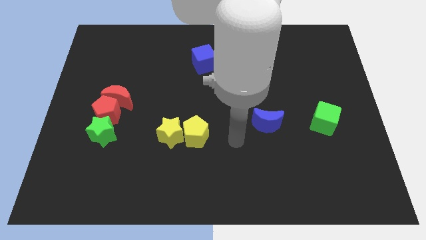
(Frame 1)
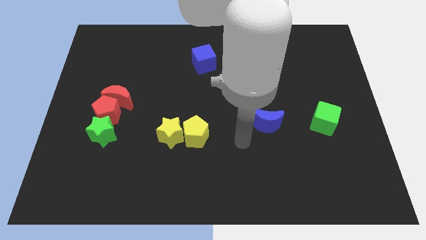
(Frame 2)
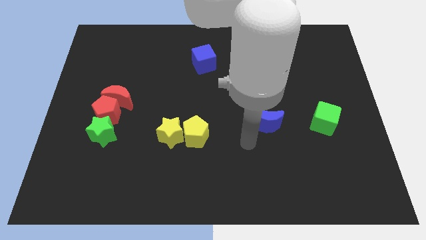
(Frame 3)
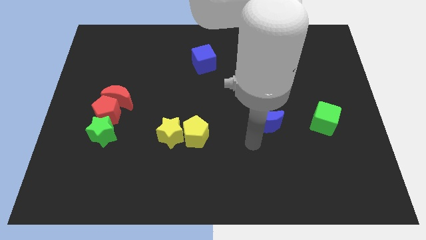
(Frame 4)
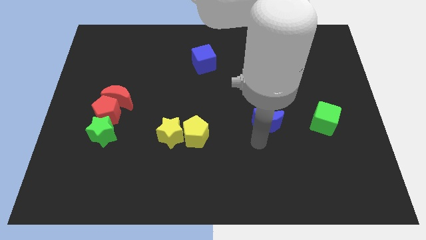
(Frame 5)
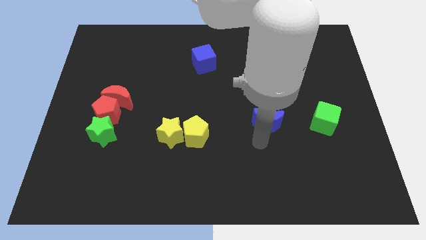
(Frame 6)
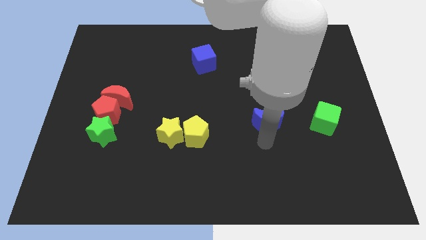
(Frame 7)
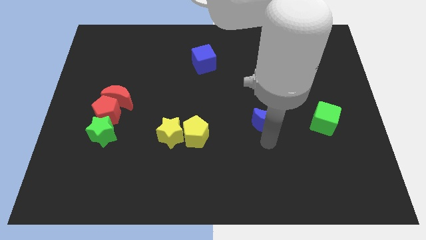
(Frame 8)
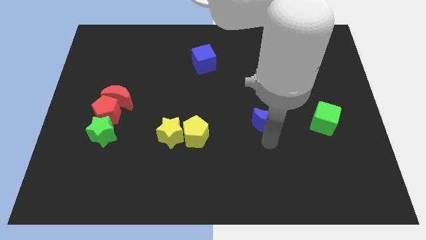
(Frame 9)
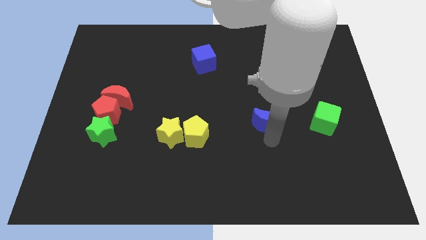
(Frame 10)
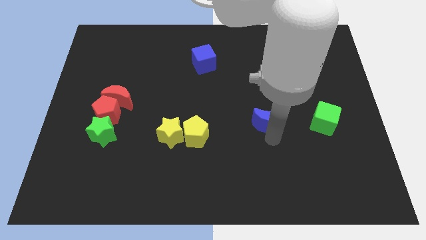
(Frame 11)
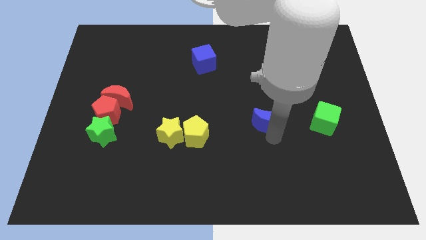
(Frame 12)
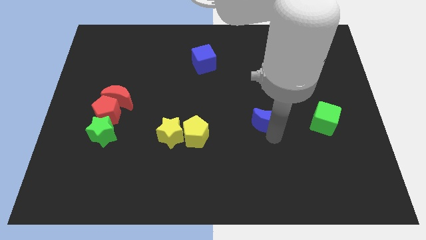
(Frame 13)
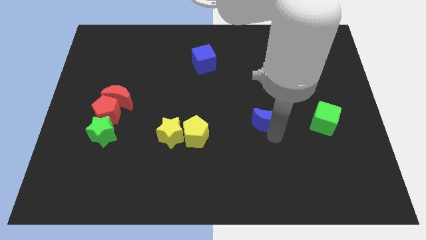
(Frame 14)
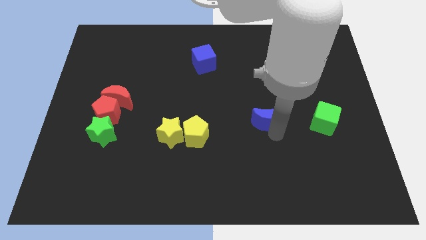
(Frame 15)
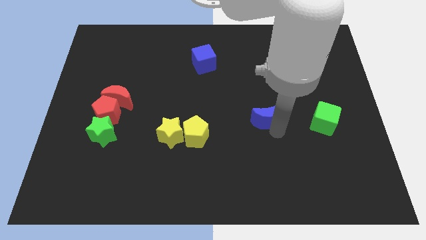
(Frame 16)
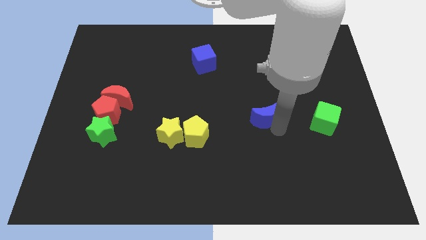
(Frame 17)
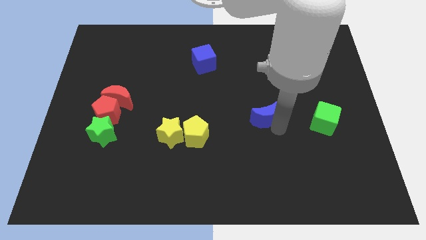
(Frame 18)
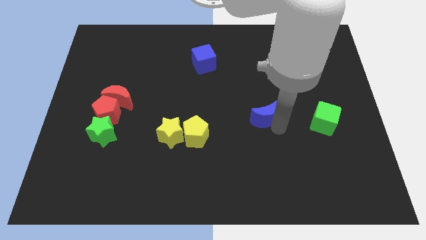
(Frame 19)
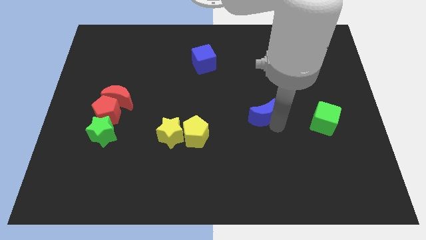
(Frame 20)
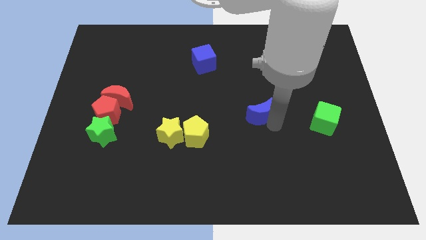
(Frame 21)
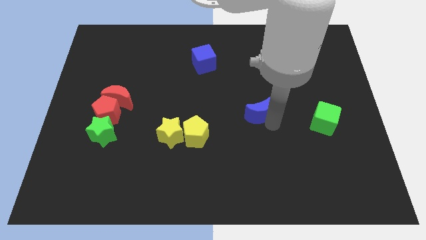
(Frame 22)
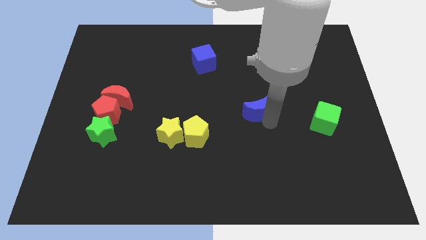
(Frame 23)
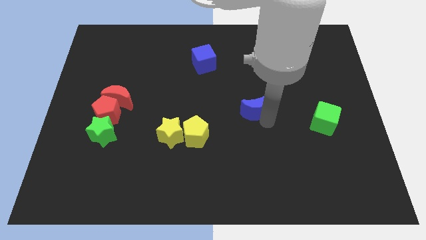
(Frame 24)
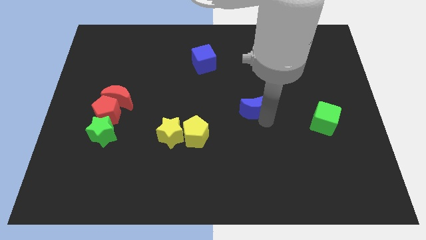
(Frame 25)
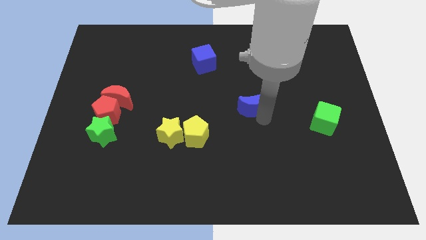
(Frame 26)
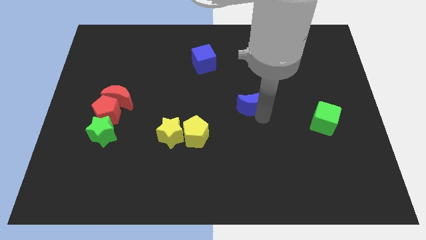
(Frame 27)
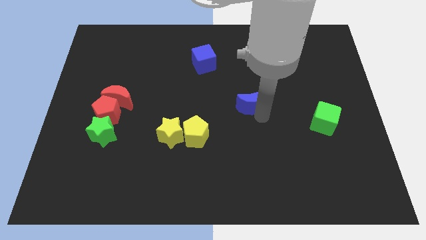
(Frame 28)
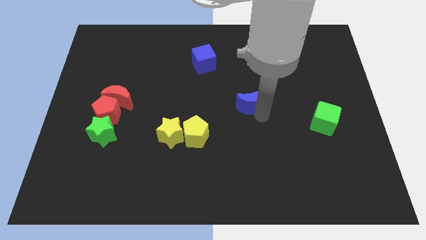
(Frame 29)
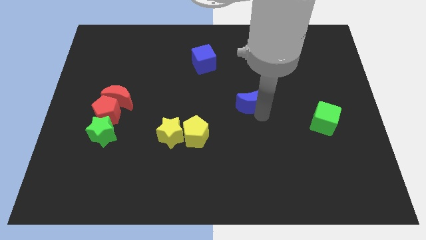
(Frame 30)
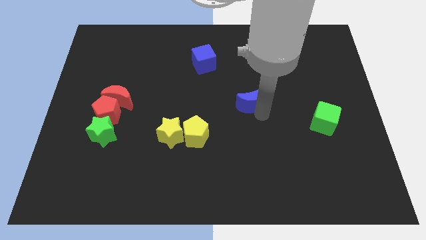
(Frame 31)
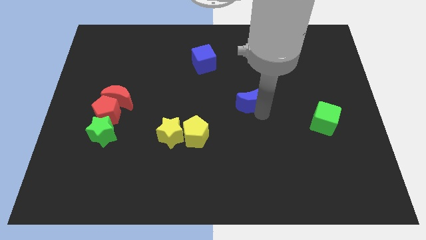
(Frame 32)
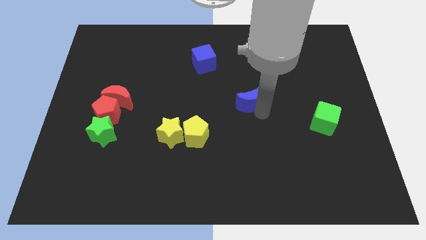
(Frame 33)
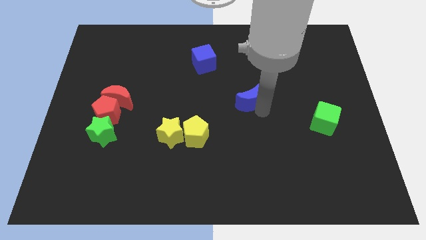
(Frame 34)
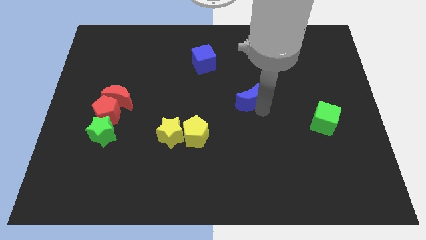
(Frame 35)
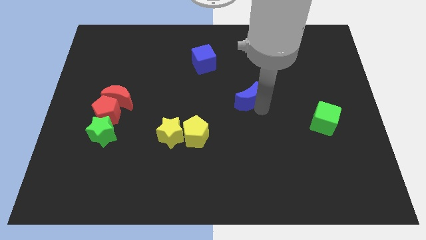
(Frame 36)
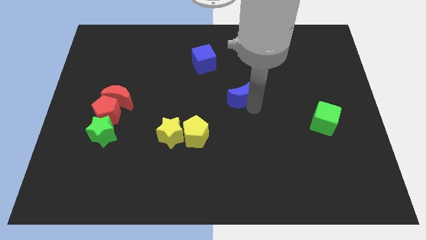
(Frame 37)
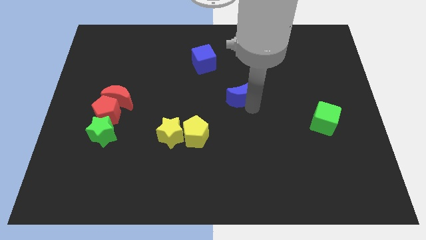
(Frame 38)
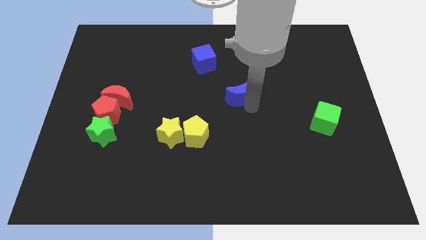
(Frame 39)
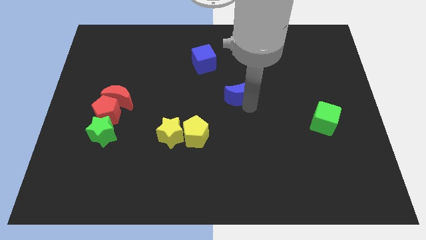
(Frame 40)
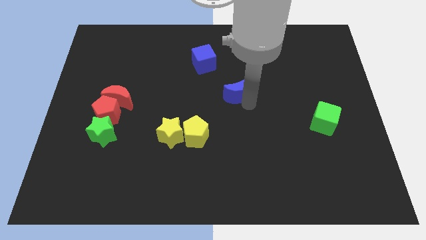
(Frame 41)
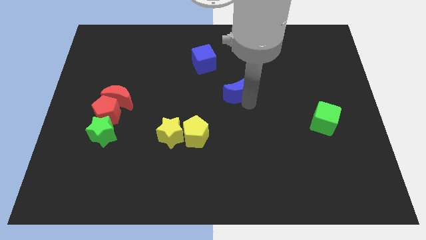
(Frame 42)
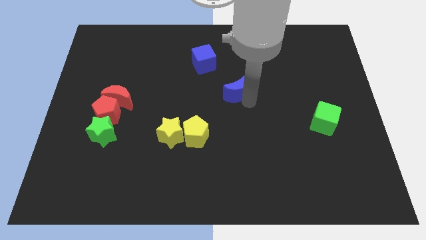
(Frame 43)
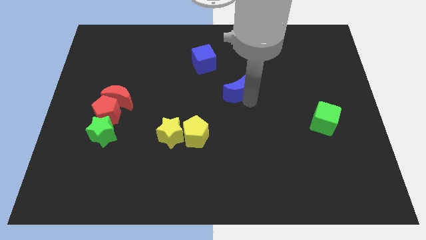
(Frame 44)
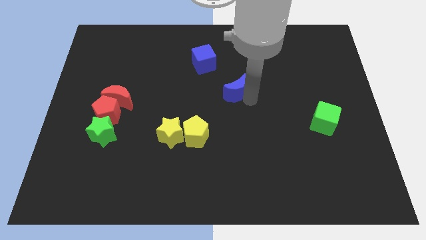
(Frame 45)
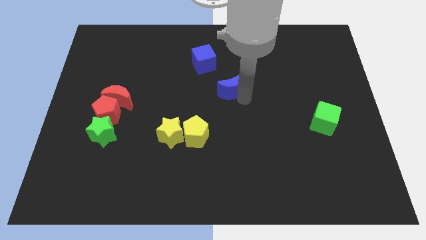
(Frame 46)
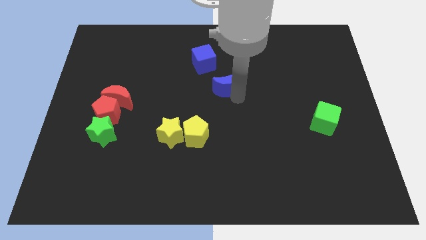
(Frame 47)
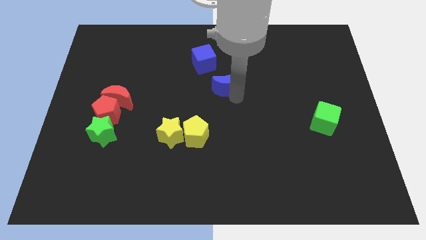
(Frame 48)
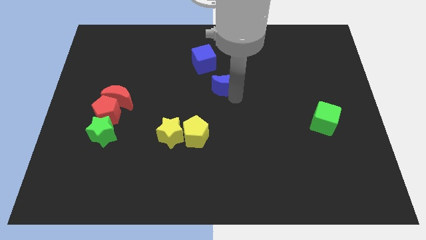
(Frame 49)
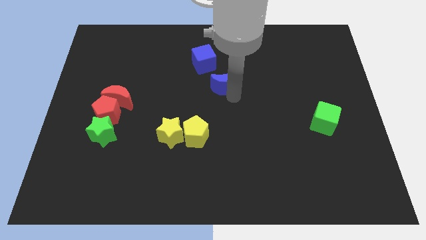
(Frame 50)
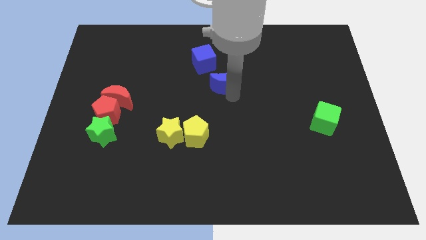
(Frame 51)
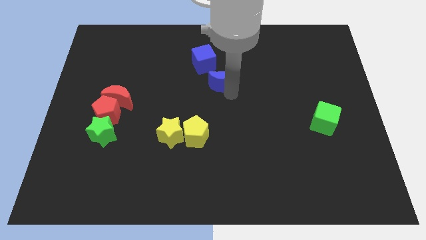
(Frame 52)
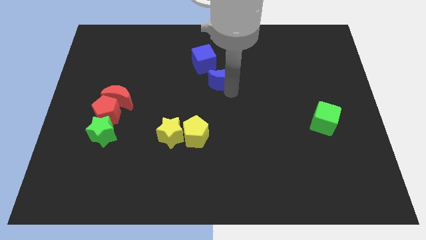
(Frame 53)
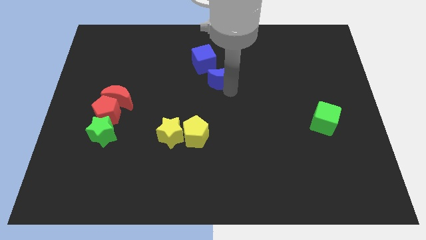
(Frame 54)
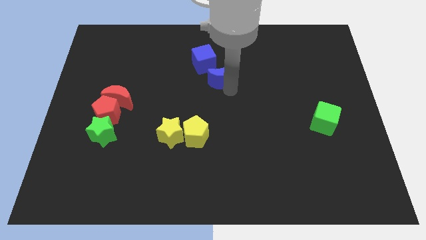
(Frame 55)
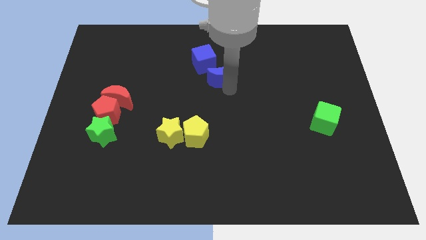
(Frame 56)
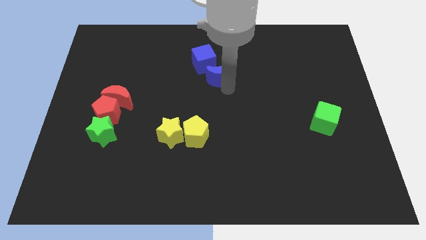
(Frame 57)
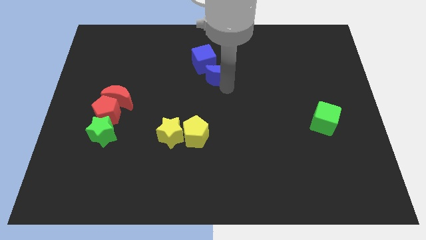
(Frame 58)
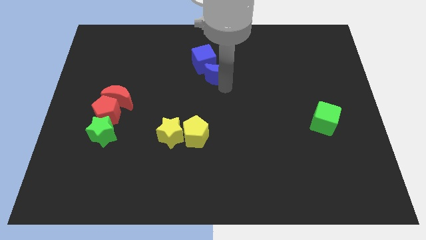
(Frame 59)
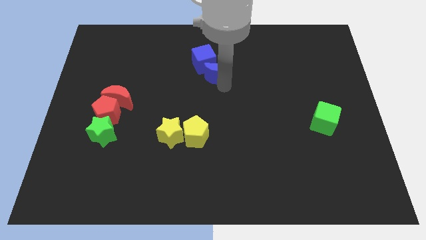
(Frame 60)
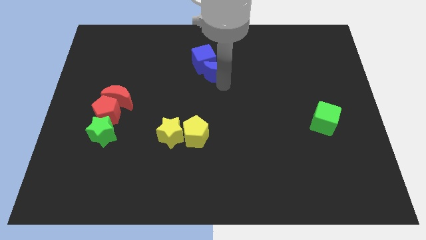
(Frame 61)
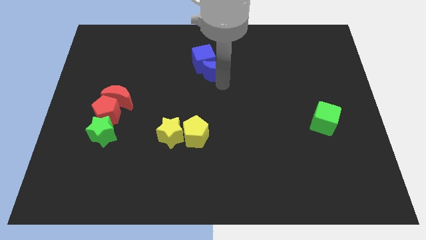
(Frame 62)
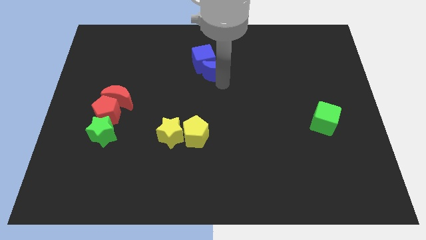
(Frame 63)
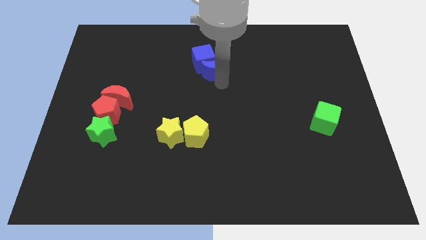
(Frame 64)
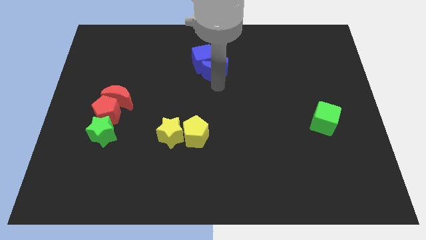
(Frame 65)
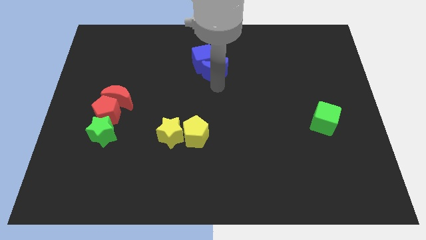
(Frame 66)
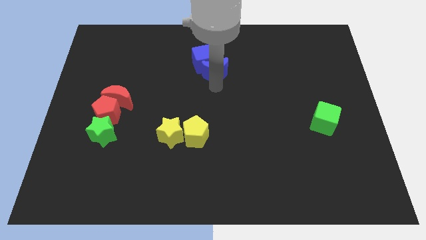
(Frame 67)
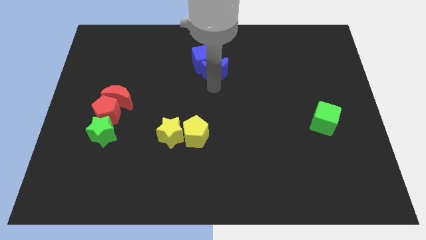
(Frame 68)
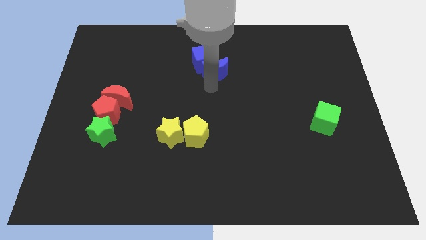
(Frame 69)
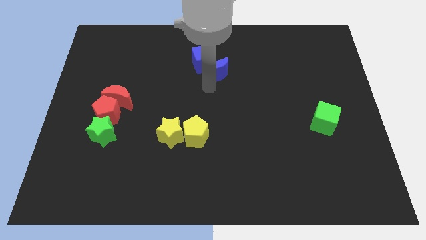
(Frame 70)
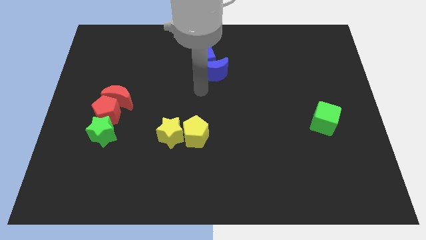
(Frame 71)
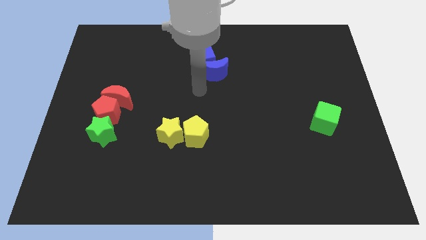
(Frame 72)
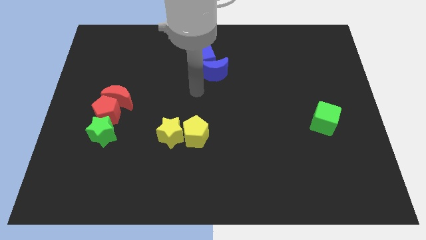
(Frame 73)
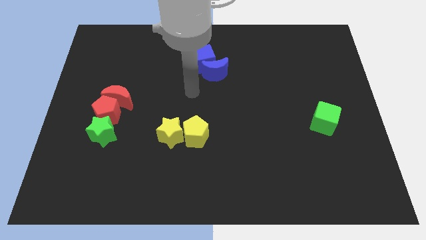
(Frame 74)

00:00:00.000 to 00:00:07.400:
place your arm in between blue blocks and yellow blocks

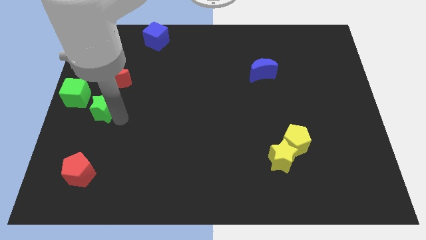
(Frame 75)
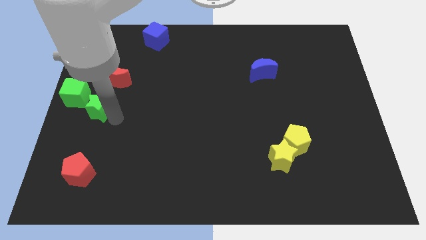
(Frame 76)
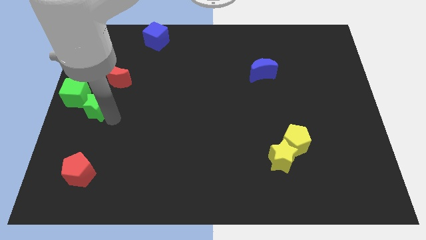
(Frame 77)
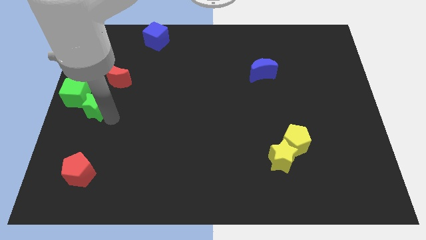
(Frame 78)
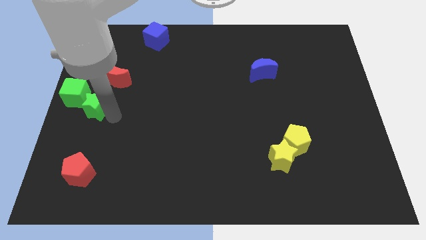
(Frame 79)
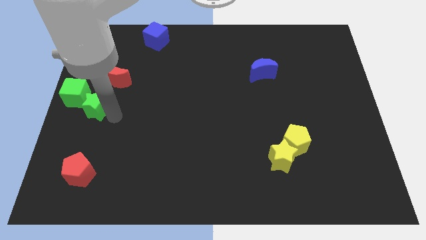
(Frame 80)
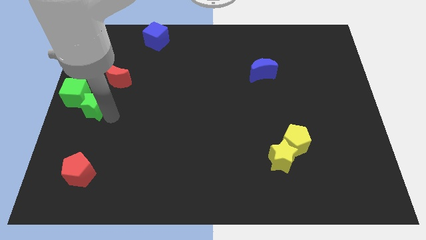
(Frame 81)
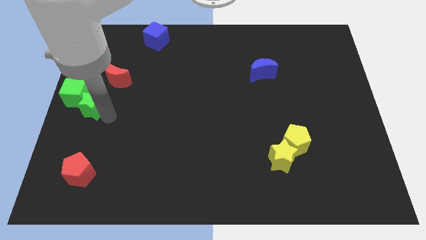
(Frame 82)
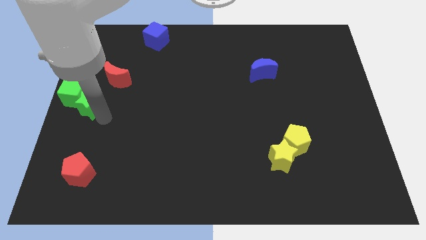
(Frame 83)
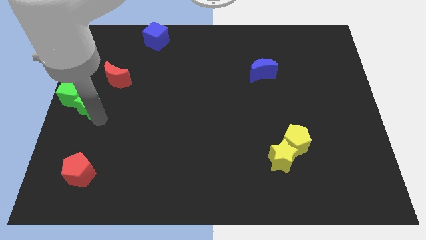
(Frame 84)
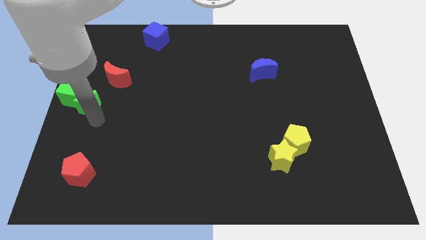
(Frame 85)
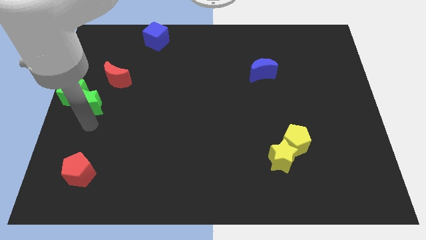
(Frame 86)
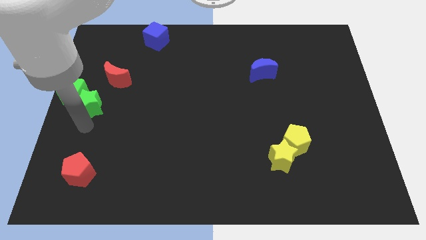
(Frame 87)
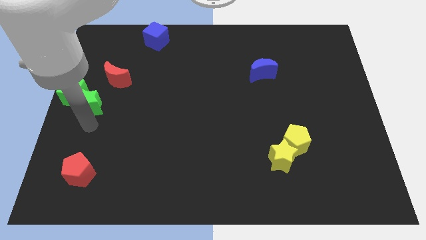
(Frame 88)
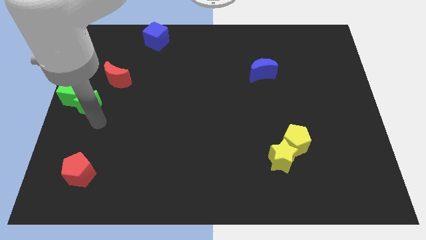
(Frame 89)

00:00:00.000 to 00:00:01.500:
move green star into the green cube
